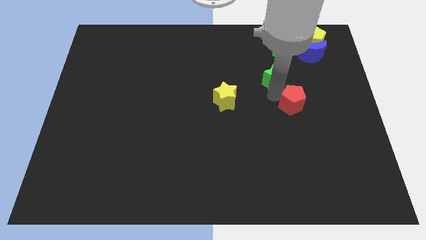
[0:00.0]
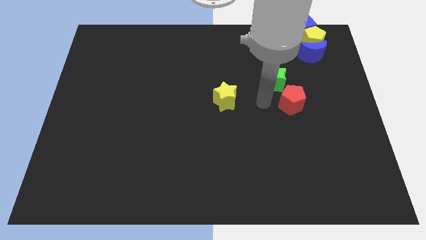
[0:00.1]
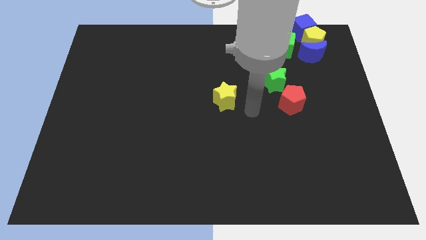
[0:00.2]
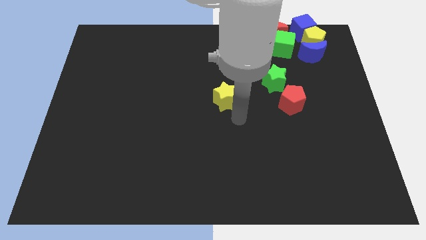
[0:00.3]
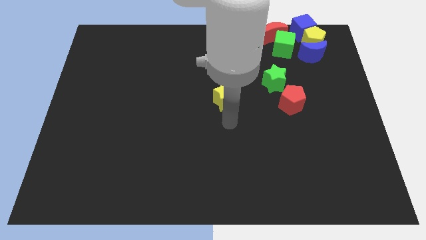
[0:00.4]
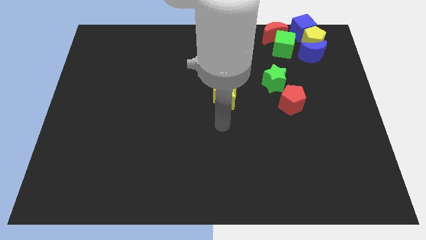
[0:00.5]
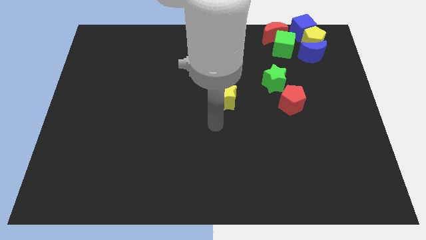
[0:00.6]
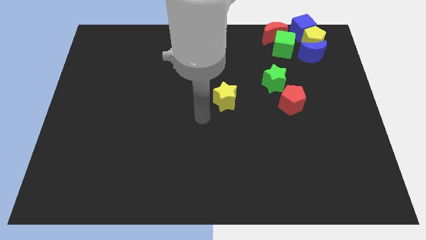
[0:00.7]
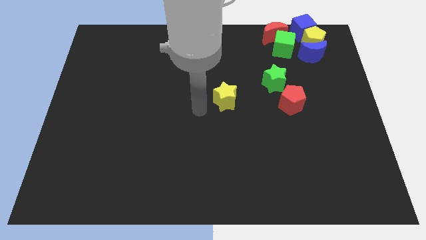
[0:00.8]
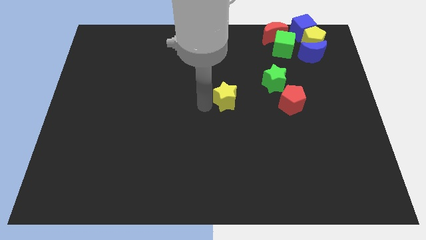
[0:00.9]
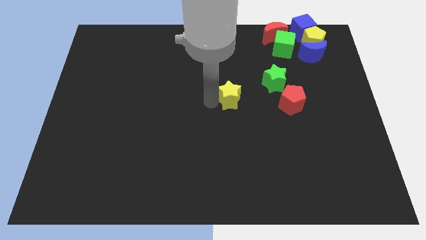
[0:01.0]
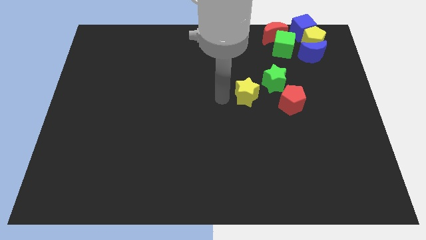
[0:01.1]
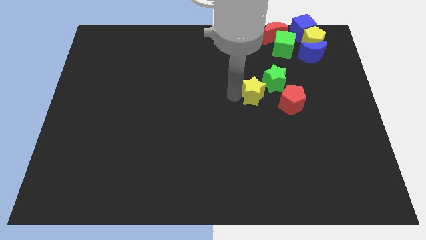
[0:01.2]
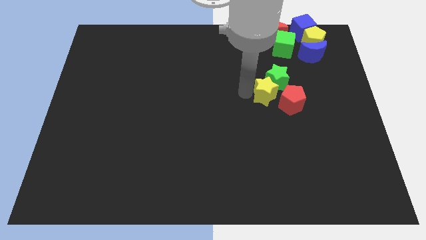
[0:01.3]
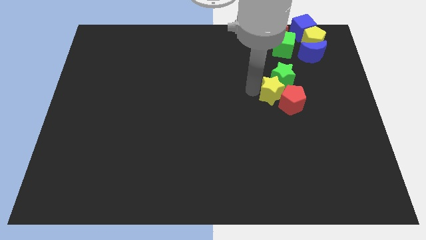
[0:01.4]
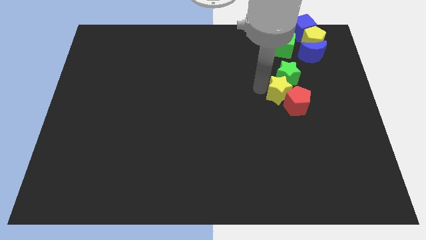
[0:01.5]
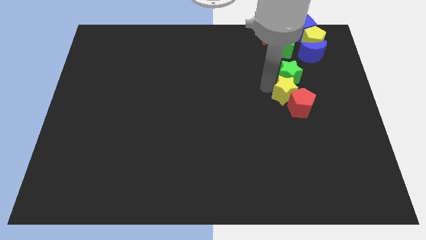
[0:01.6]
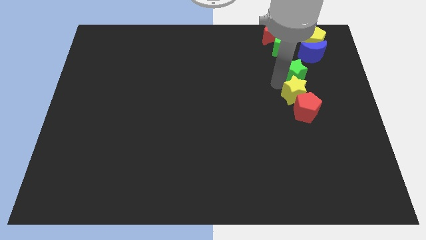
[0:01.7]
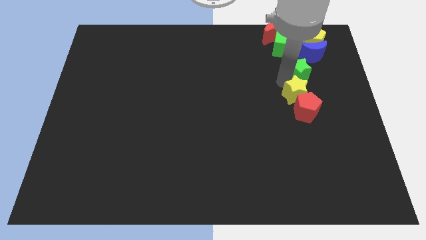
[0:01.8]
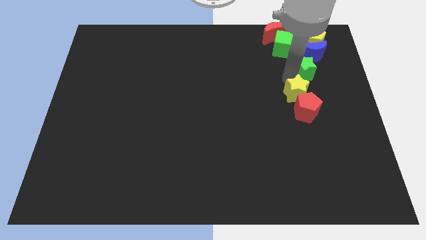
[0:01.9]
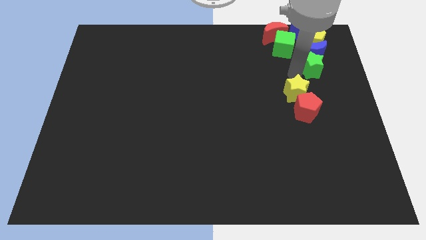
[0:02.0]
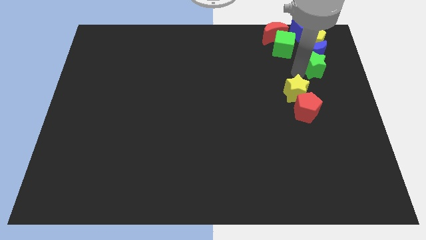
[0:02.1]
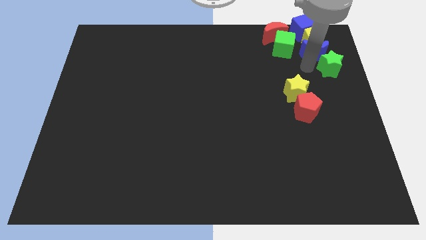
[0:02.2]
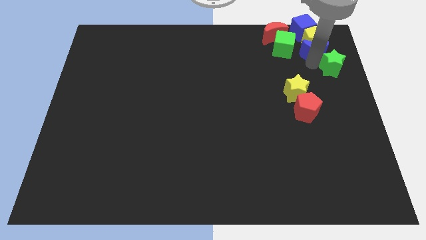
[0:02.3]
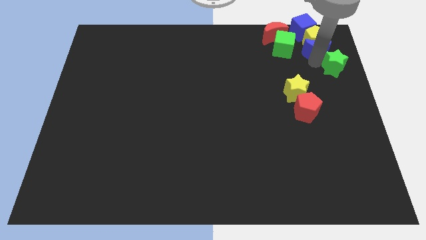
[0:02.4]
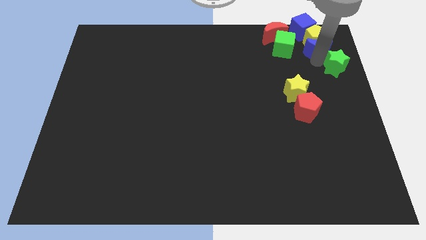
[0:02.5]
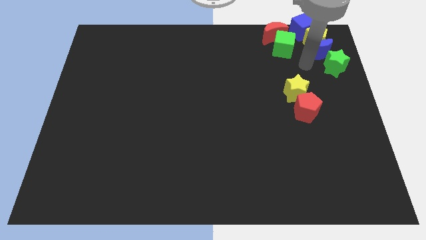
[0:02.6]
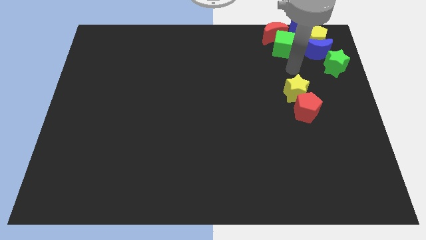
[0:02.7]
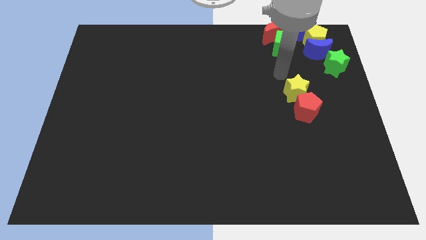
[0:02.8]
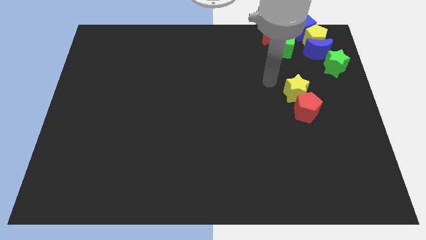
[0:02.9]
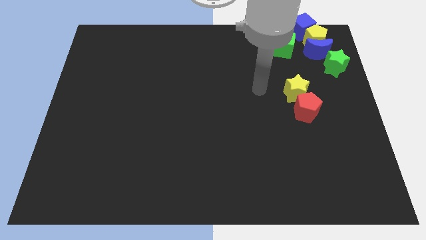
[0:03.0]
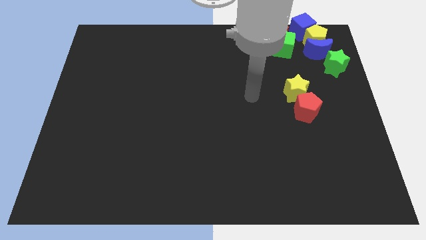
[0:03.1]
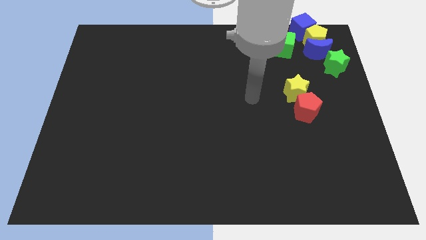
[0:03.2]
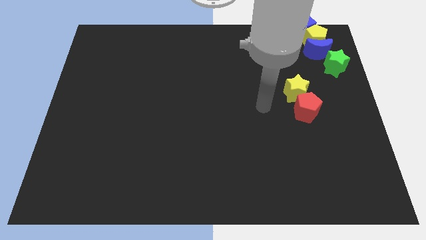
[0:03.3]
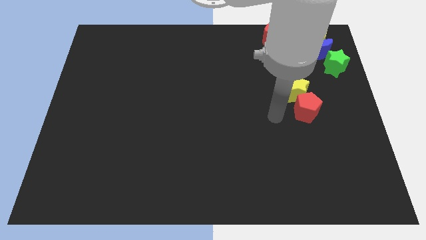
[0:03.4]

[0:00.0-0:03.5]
push the yellow star into the green star

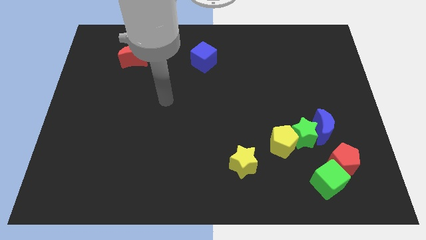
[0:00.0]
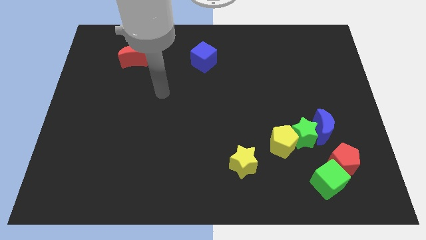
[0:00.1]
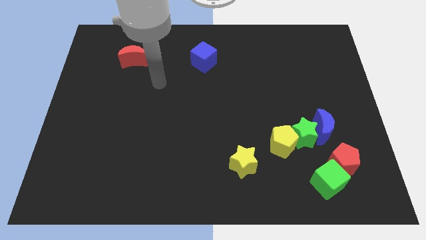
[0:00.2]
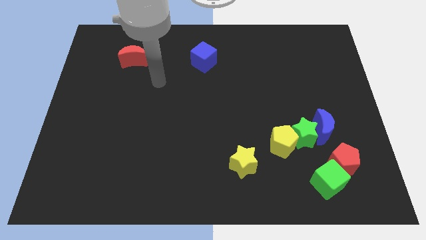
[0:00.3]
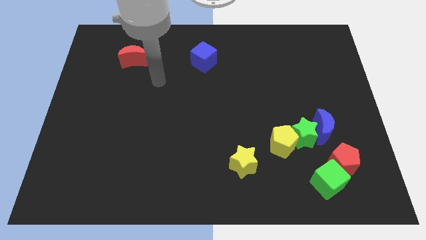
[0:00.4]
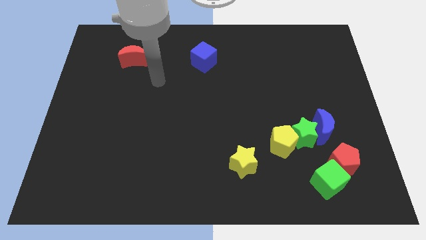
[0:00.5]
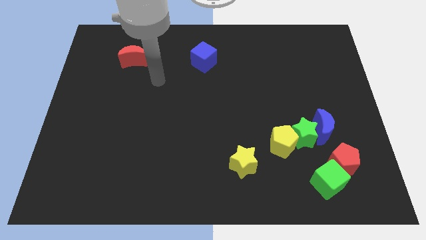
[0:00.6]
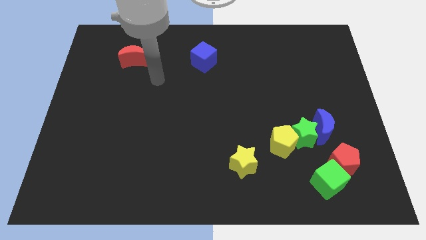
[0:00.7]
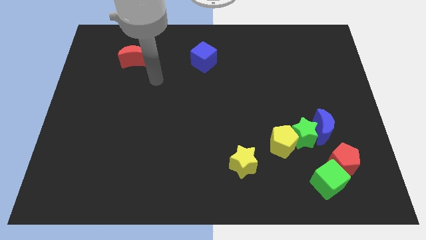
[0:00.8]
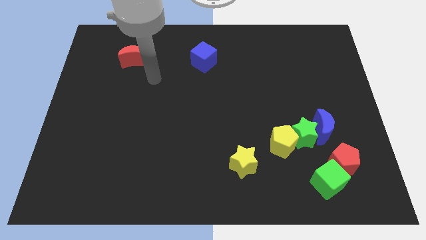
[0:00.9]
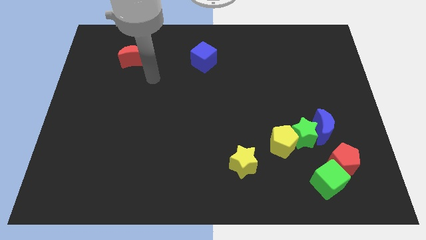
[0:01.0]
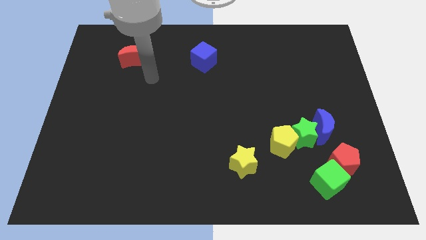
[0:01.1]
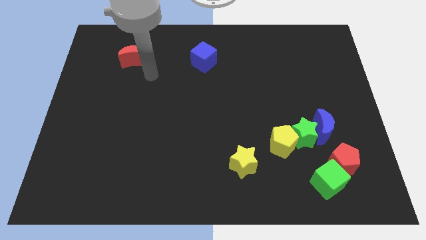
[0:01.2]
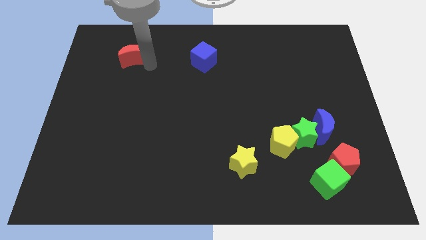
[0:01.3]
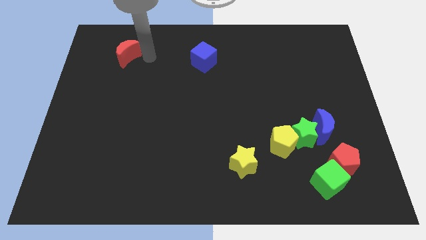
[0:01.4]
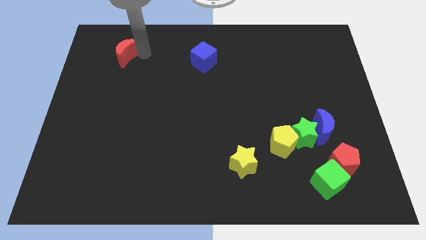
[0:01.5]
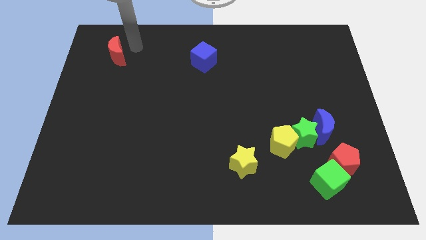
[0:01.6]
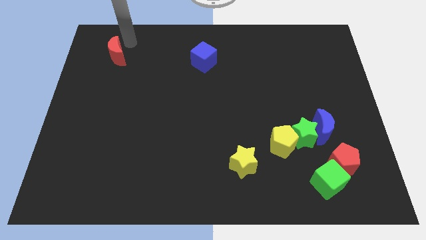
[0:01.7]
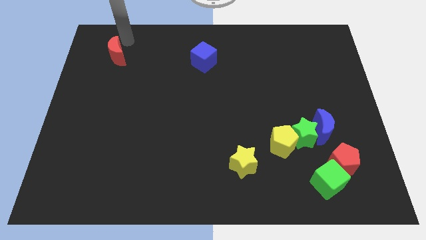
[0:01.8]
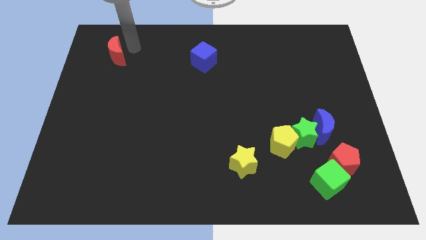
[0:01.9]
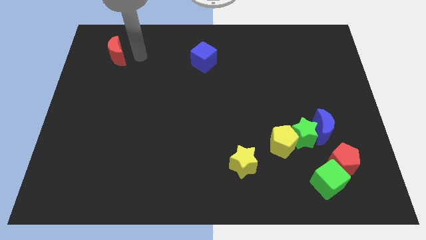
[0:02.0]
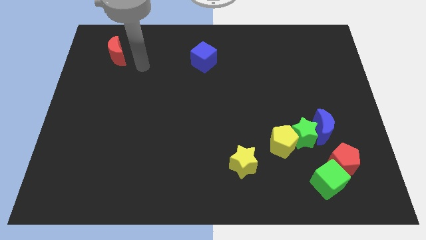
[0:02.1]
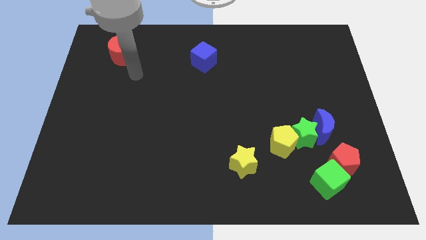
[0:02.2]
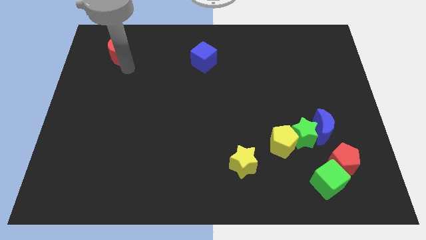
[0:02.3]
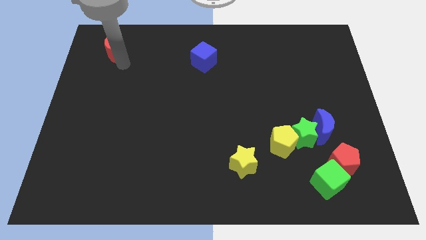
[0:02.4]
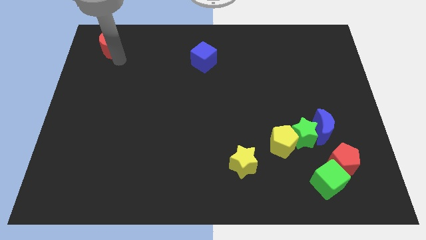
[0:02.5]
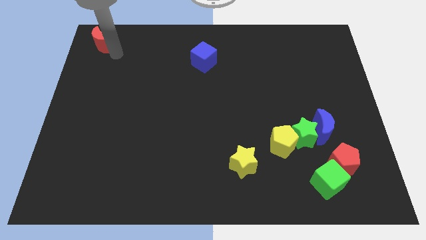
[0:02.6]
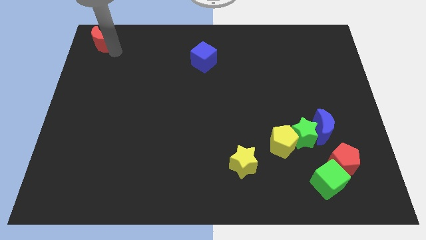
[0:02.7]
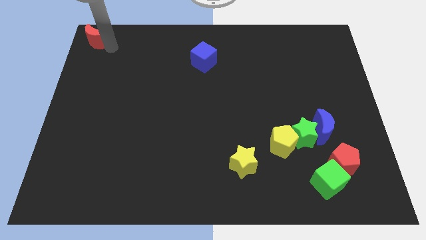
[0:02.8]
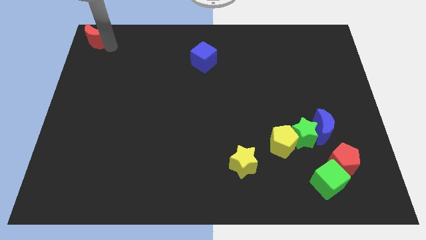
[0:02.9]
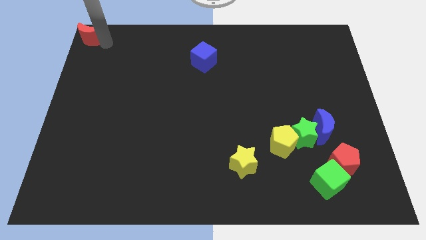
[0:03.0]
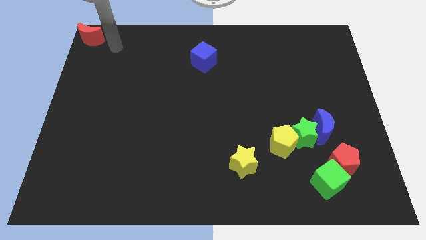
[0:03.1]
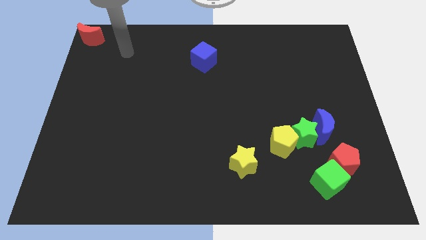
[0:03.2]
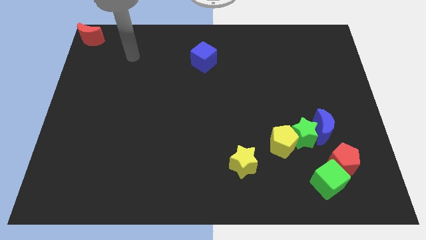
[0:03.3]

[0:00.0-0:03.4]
push the red crescent to the top left corner of the board

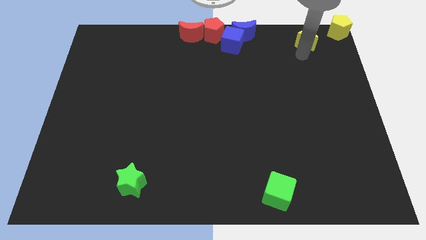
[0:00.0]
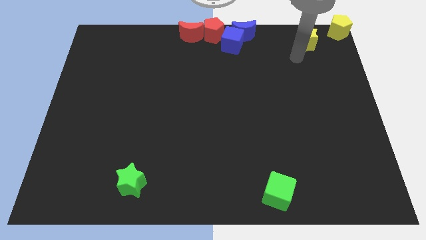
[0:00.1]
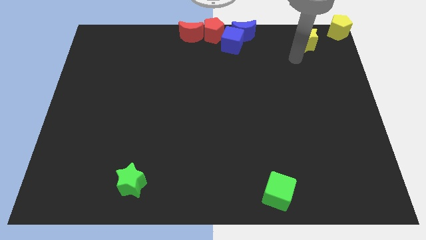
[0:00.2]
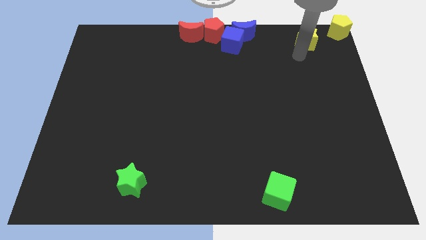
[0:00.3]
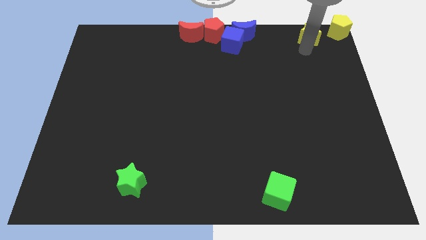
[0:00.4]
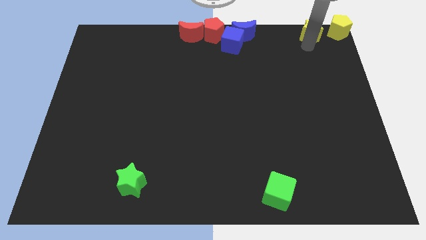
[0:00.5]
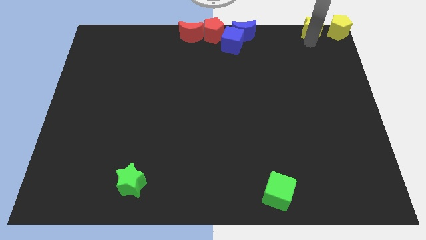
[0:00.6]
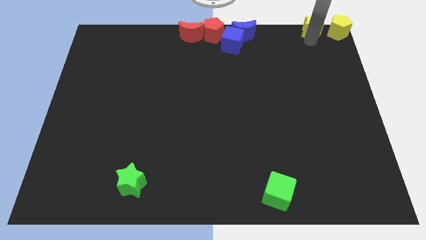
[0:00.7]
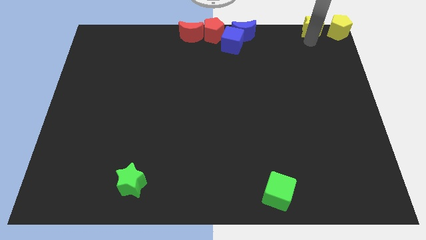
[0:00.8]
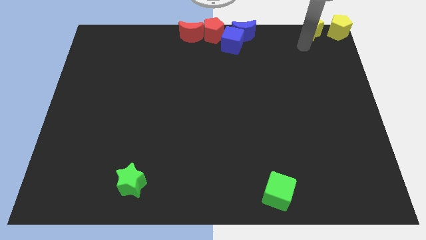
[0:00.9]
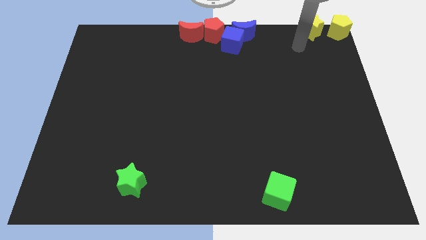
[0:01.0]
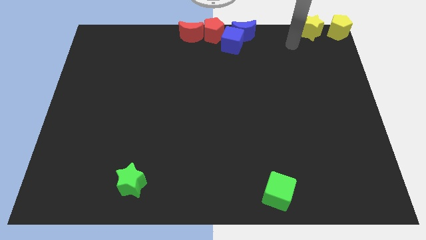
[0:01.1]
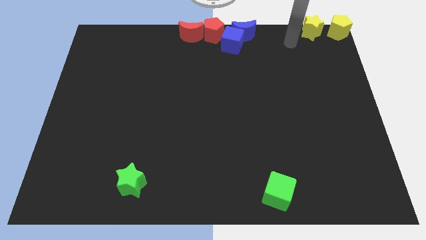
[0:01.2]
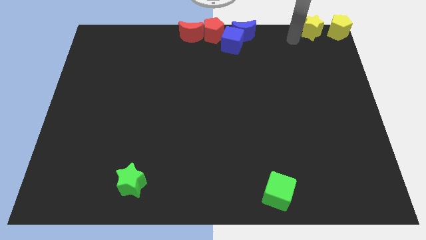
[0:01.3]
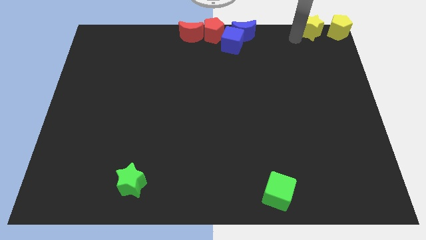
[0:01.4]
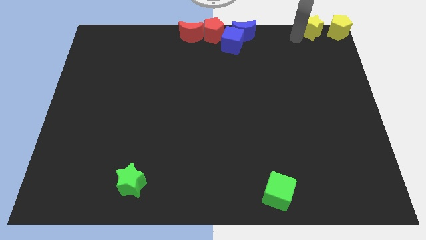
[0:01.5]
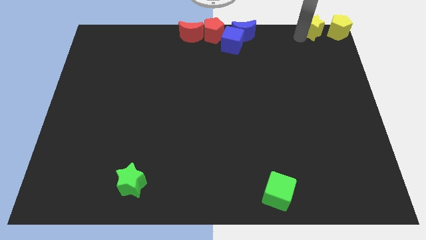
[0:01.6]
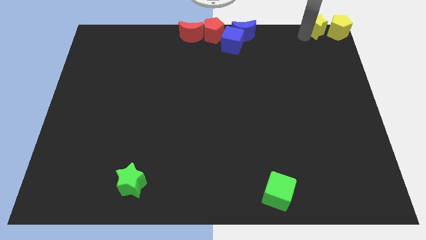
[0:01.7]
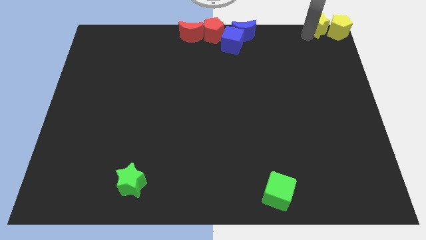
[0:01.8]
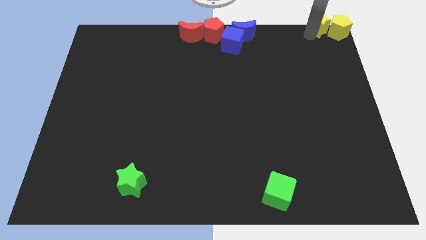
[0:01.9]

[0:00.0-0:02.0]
push the yellow star into the yellow pentagon

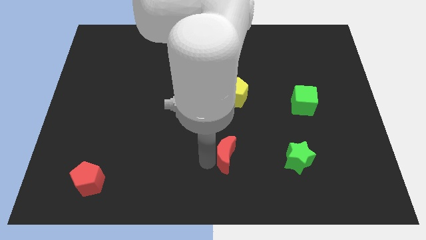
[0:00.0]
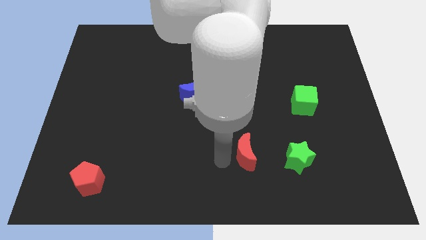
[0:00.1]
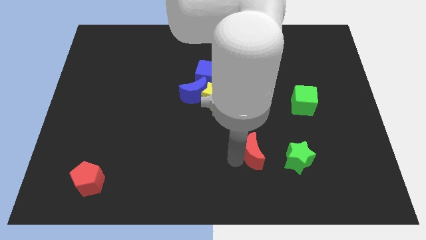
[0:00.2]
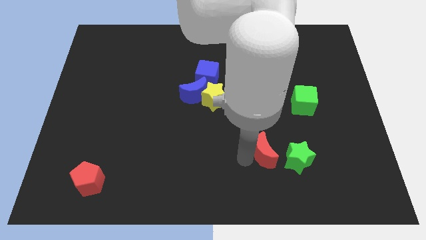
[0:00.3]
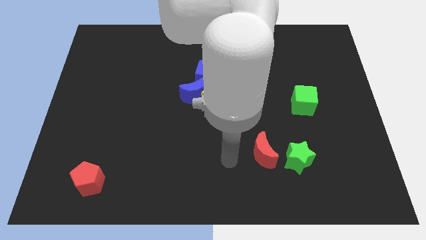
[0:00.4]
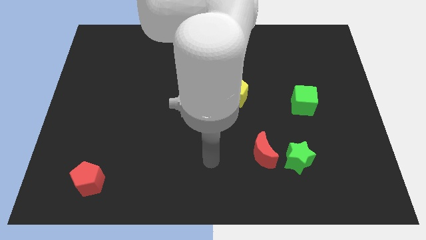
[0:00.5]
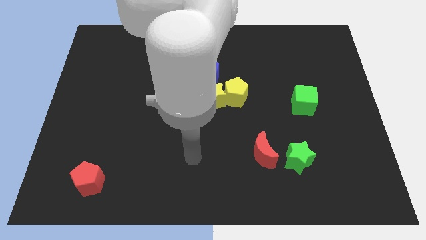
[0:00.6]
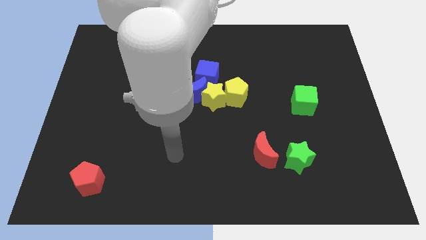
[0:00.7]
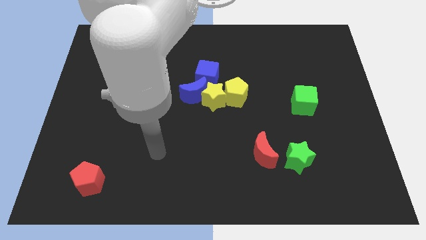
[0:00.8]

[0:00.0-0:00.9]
place red crescent beside green star
